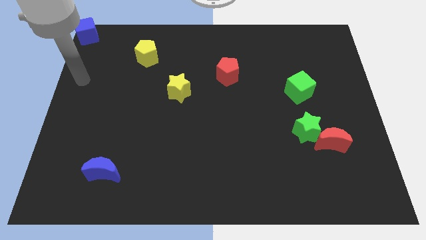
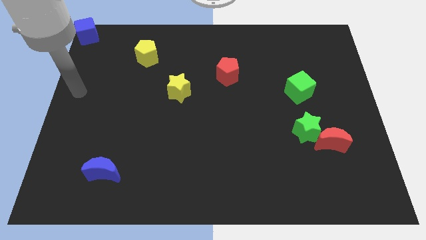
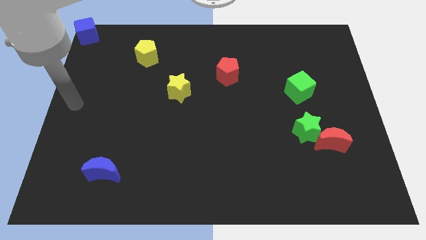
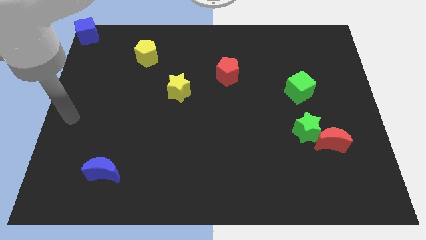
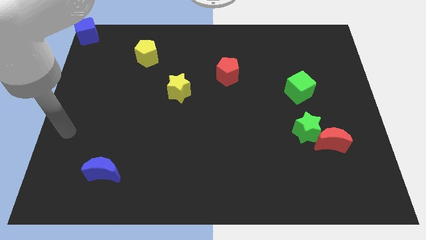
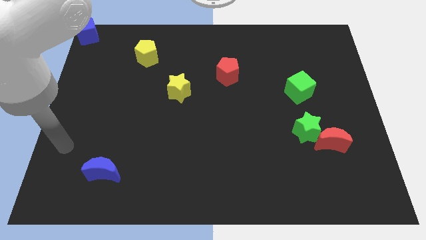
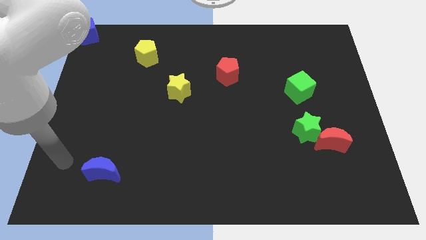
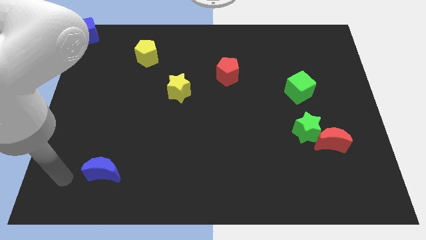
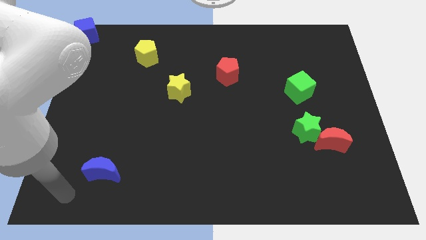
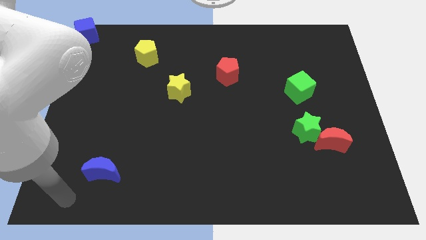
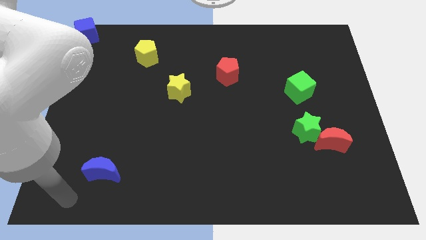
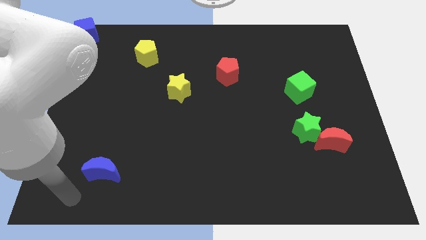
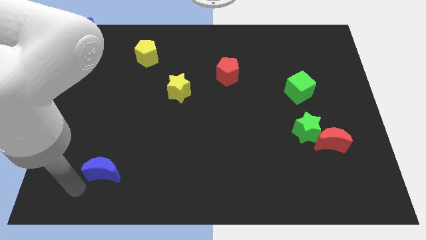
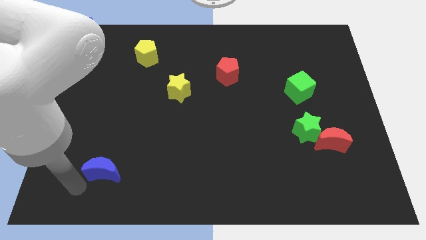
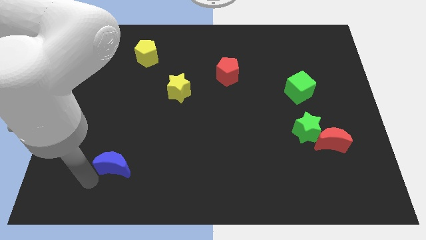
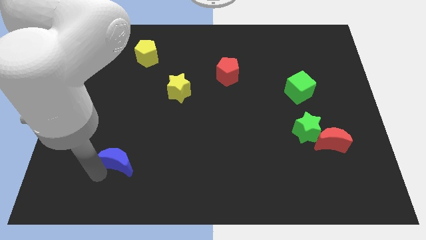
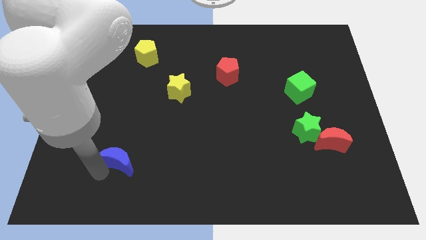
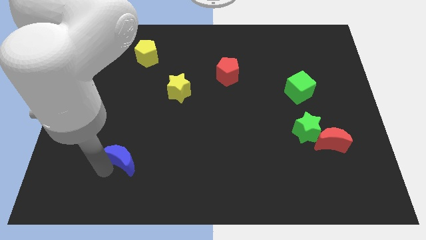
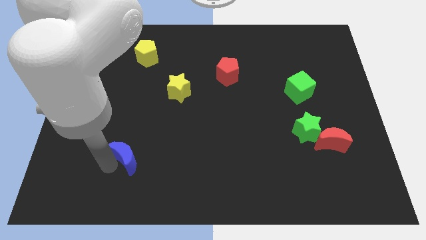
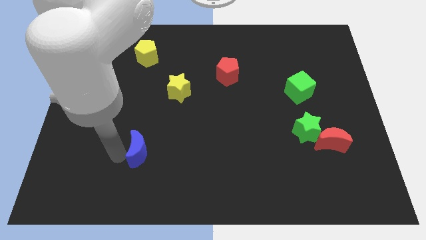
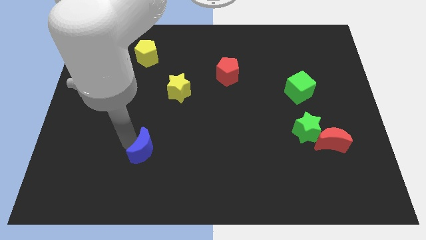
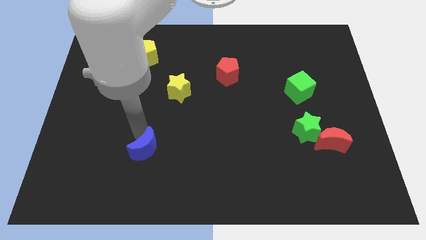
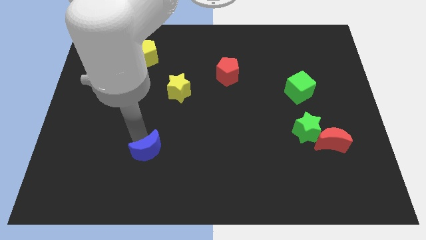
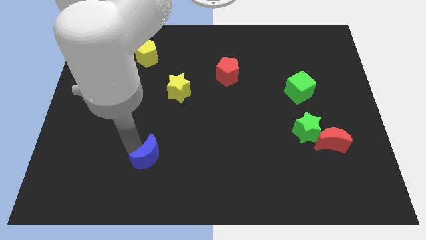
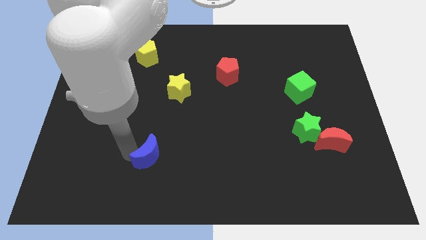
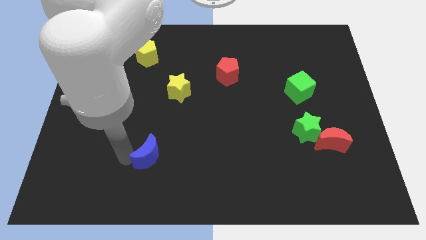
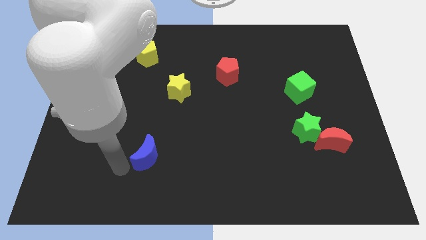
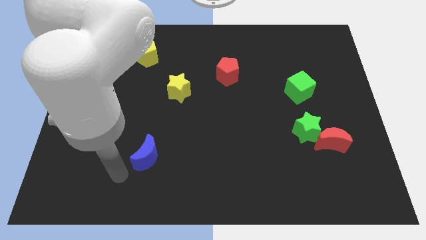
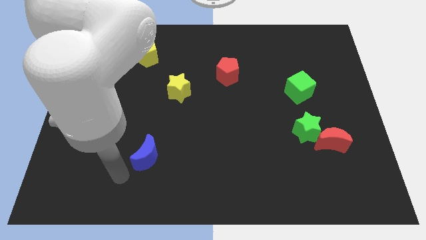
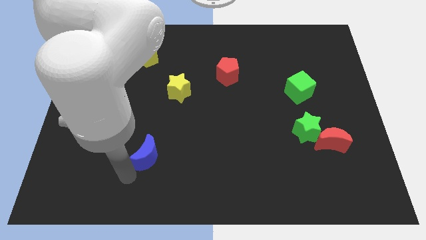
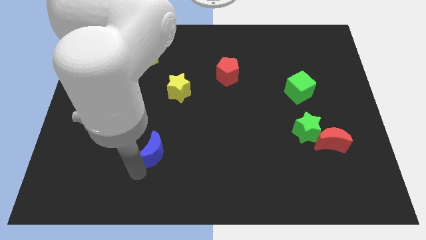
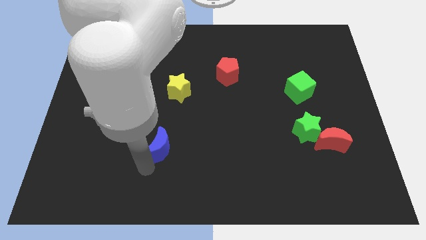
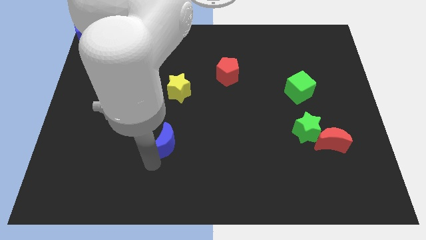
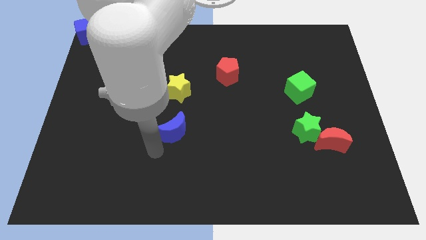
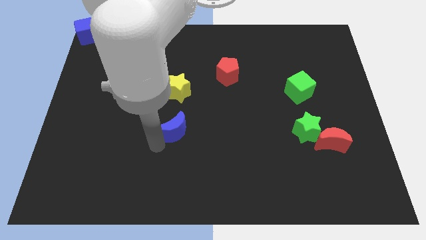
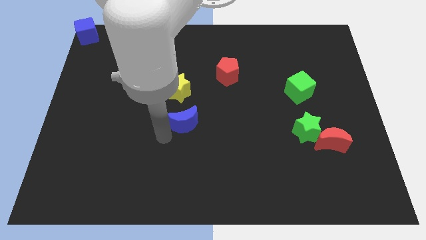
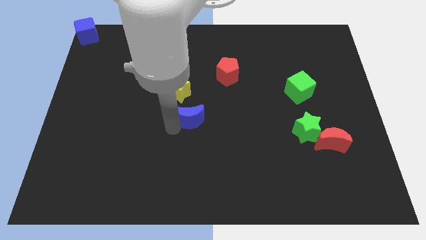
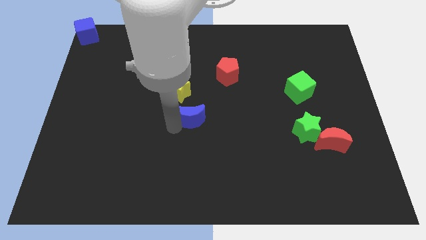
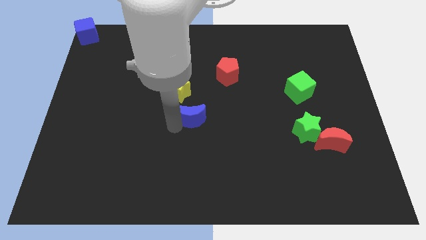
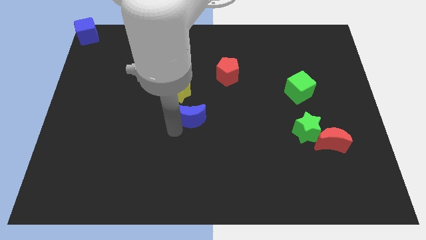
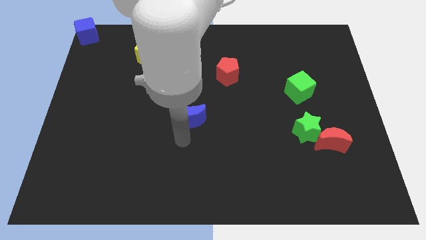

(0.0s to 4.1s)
push the blue crescent towards the center of the board

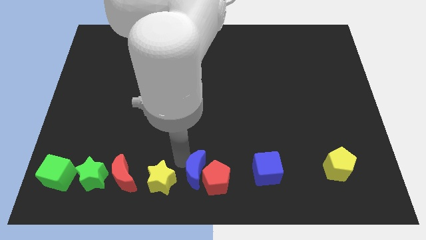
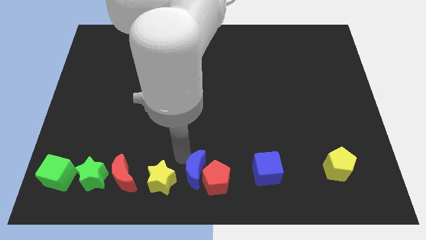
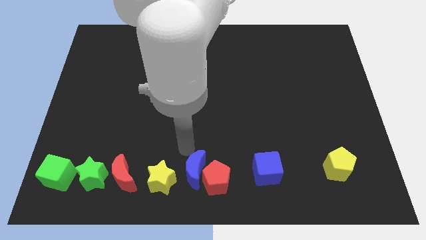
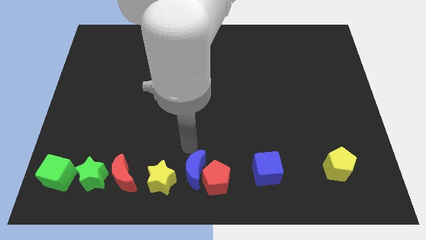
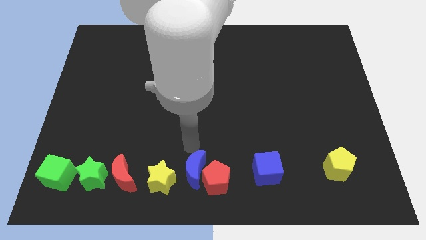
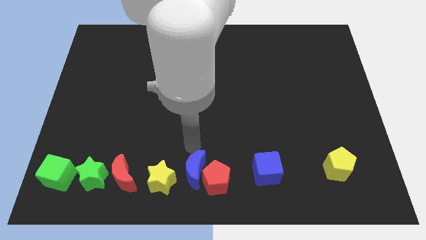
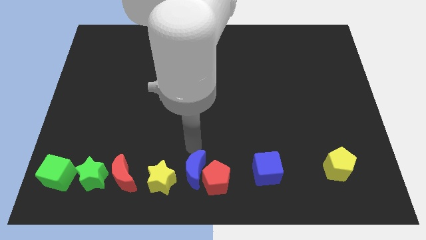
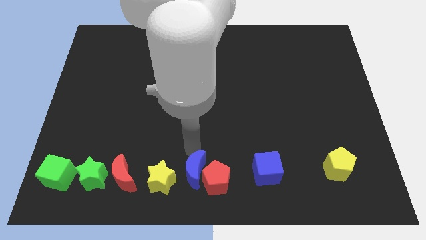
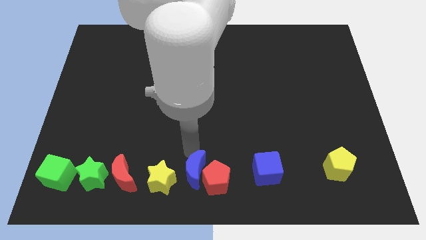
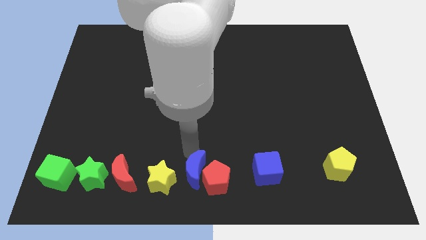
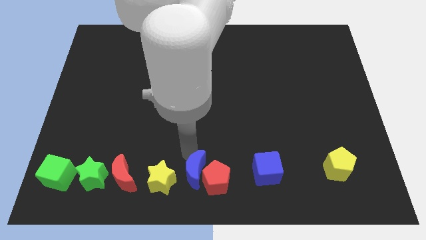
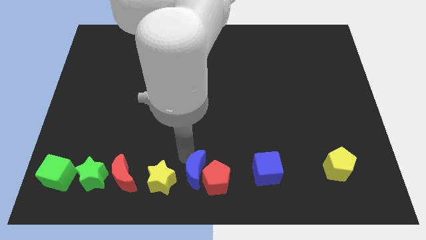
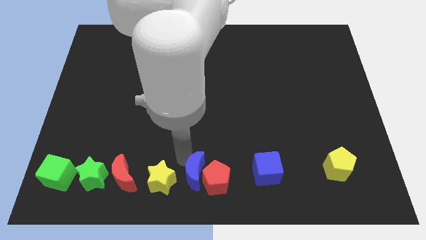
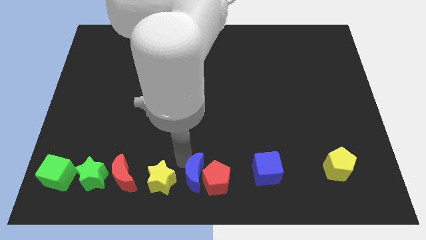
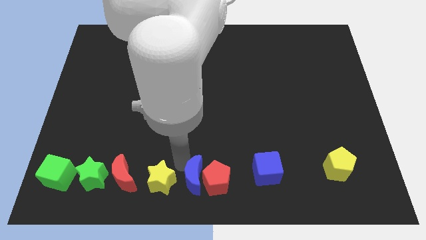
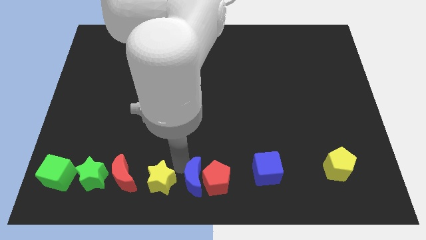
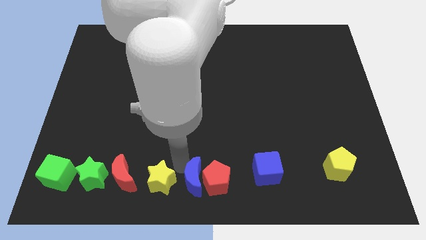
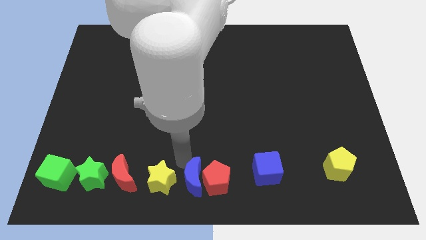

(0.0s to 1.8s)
place the blue crescent between yellow star and red pentagon

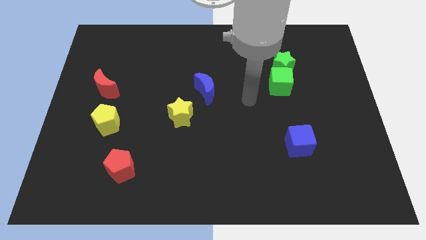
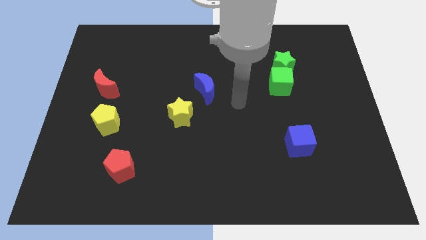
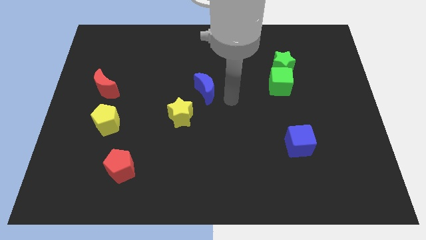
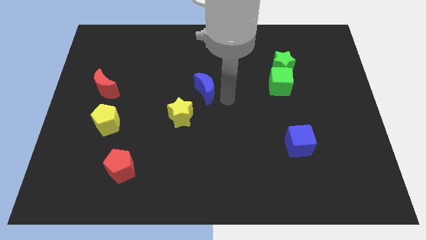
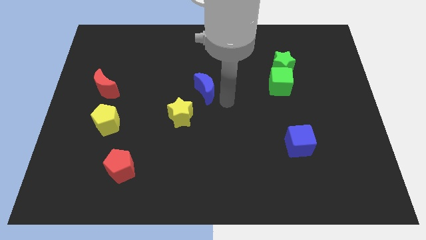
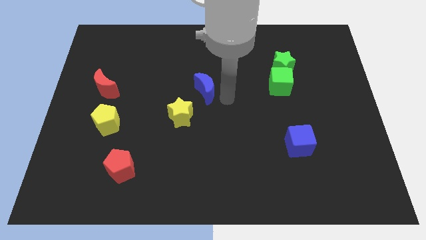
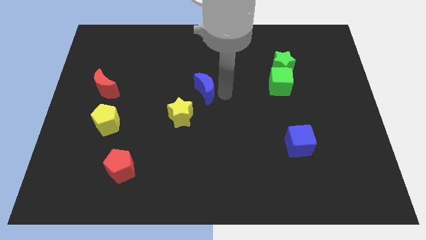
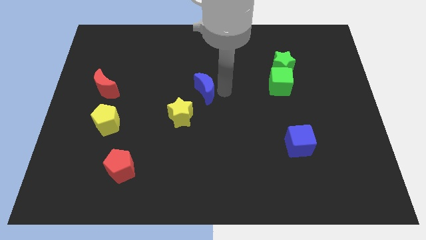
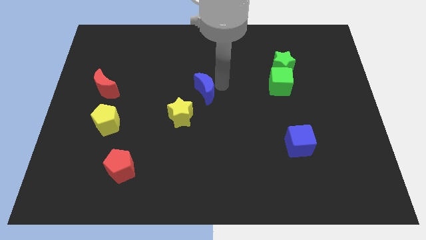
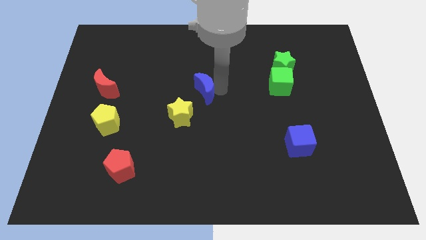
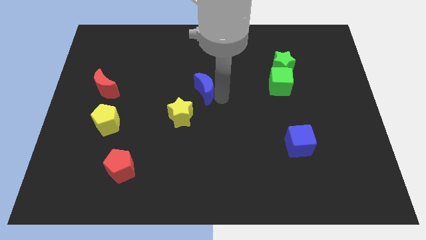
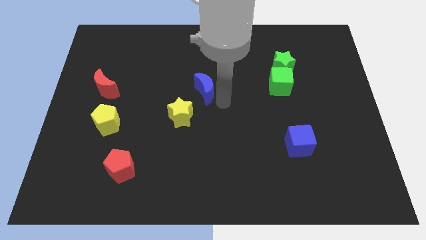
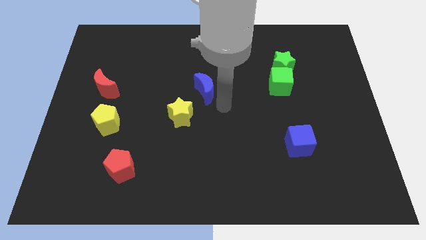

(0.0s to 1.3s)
tap the right side of the blue crescent

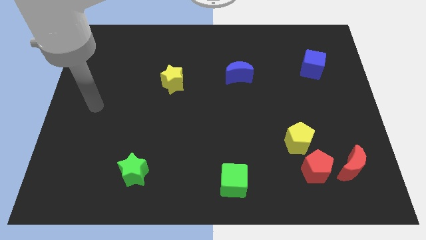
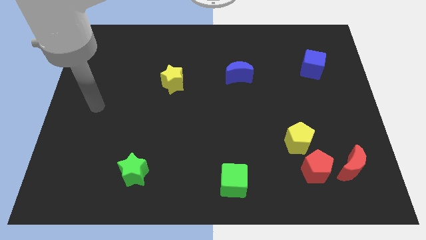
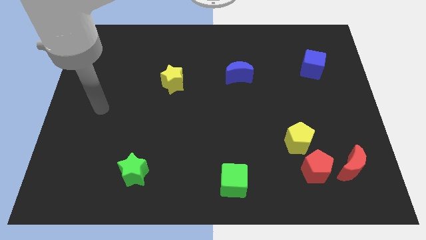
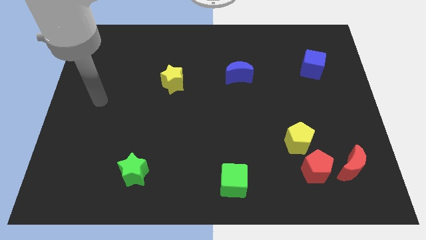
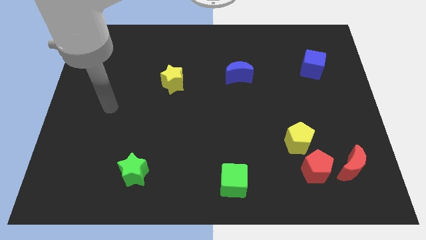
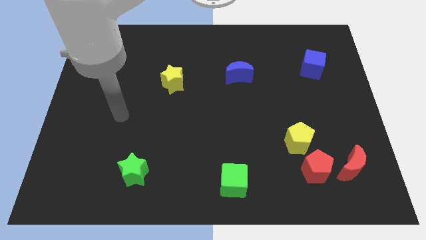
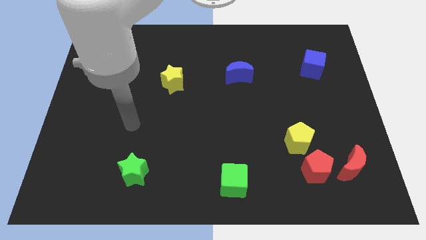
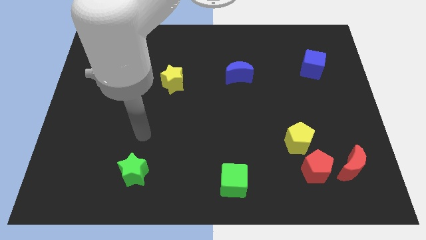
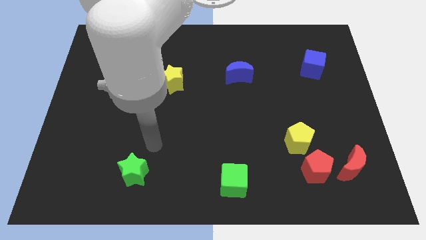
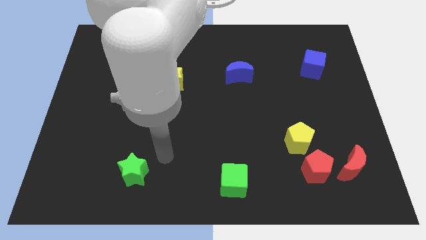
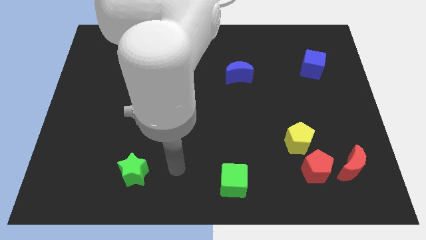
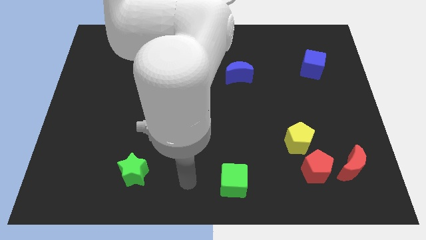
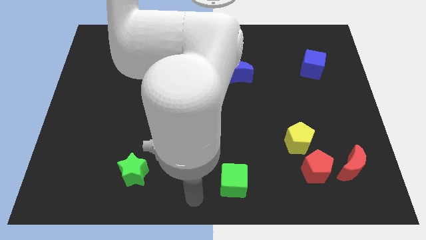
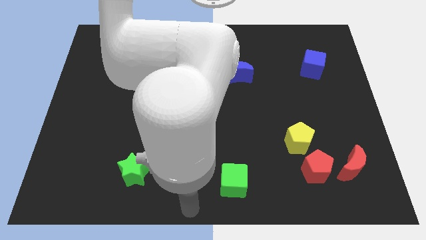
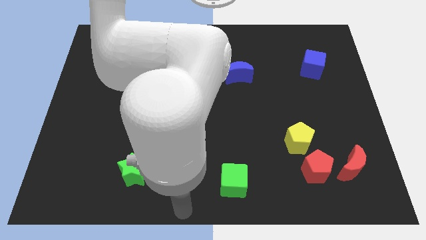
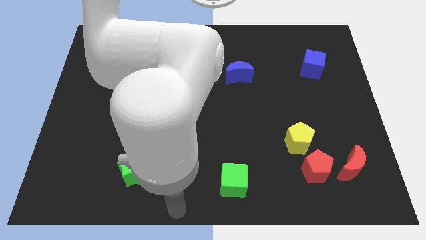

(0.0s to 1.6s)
move your arm to the bottom center of the board

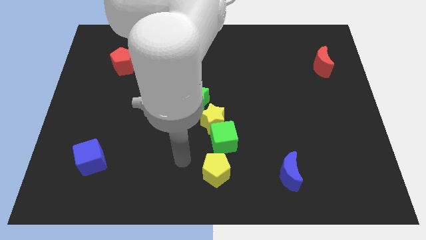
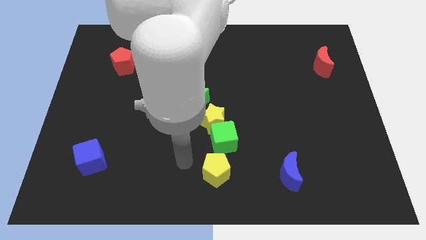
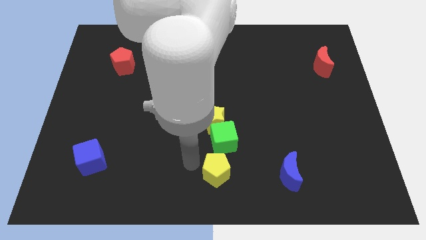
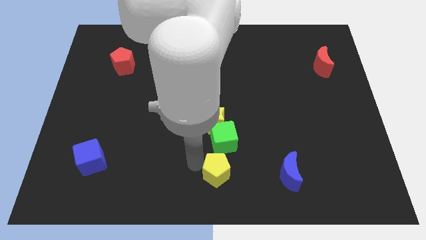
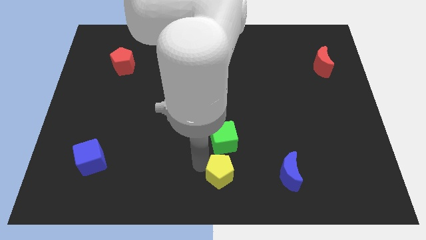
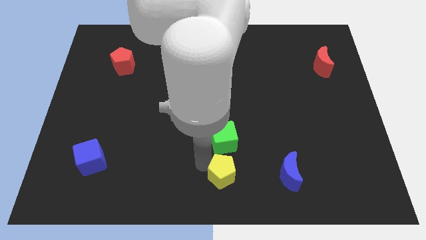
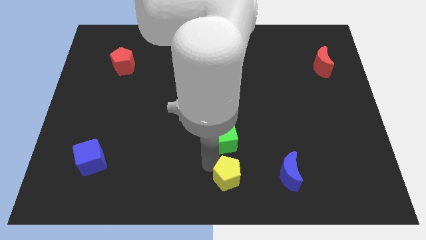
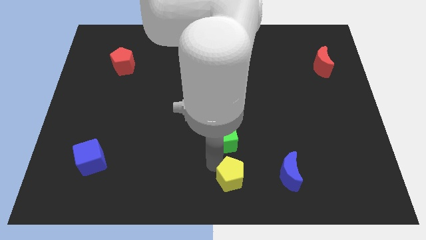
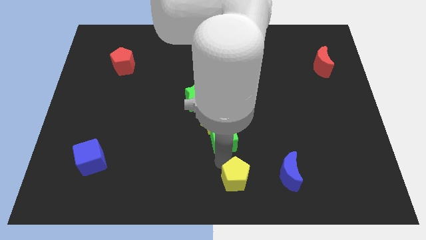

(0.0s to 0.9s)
slightly push the yellow pentagon
